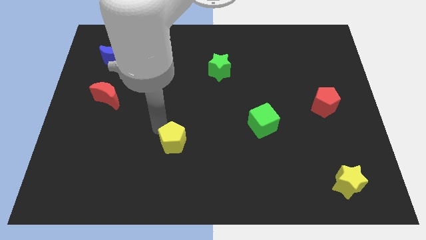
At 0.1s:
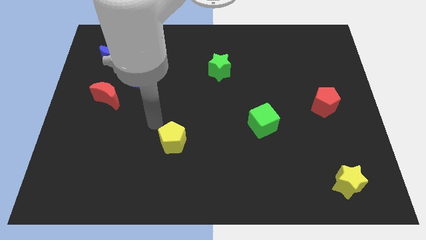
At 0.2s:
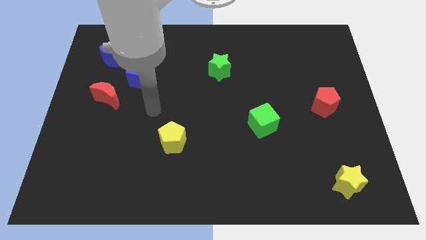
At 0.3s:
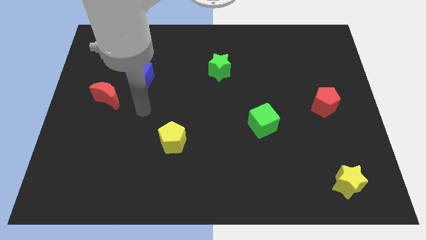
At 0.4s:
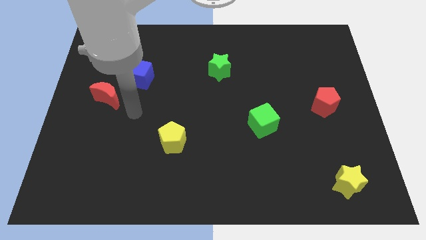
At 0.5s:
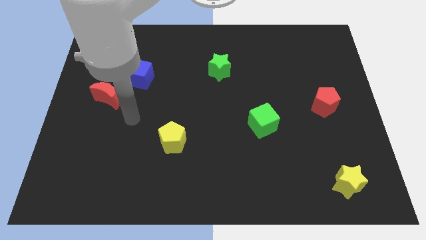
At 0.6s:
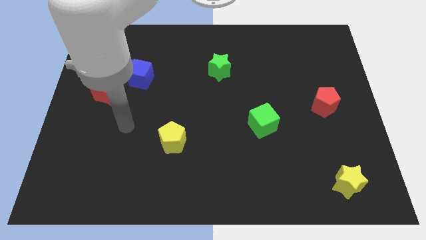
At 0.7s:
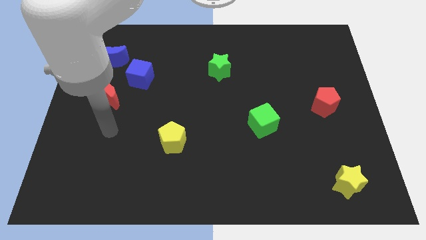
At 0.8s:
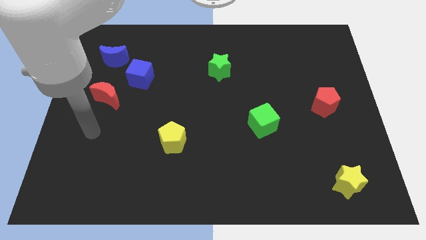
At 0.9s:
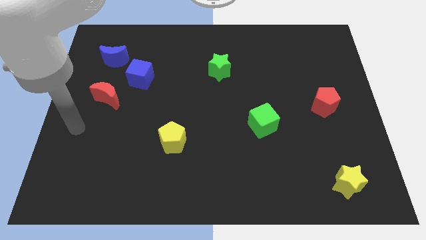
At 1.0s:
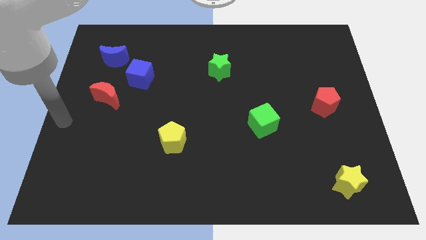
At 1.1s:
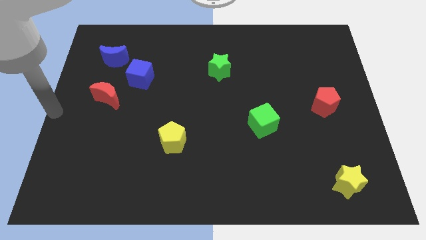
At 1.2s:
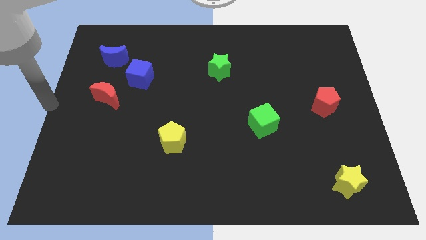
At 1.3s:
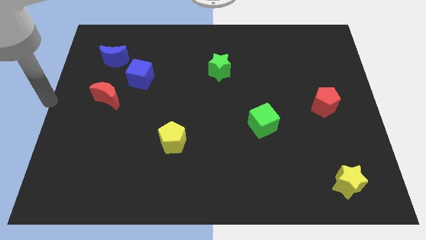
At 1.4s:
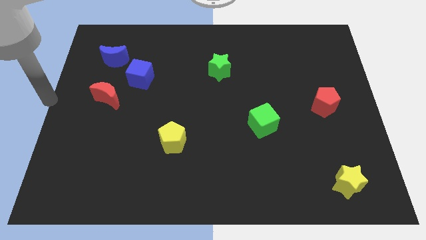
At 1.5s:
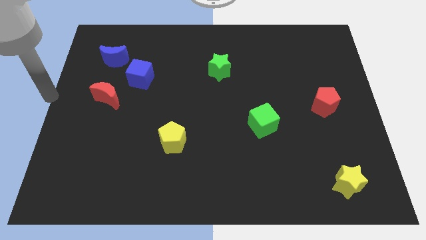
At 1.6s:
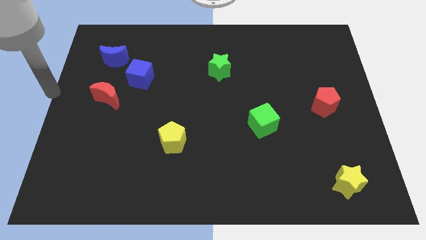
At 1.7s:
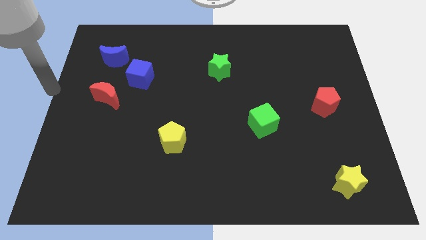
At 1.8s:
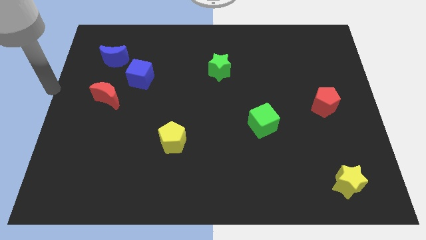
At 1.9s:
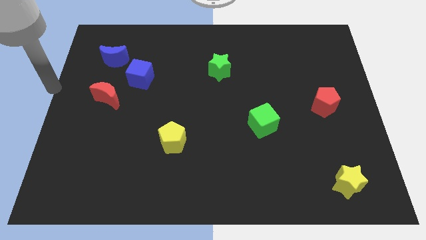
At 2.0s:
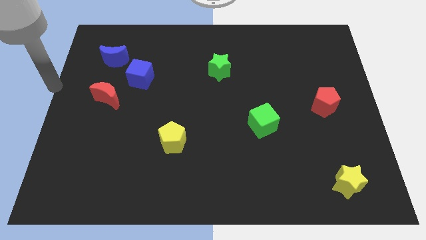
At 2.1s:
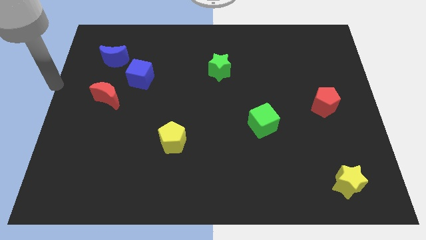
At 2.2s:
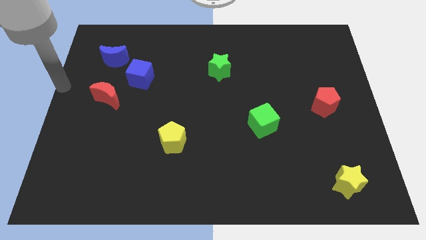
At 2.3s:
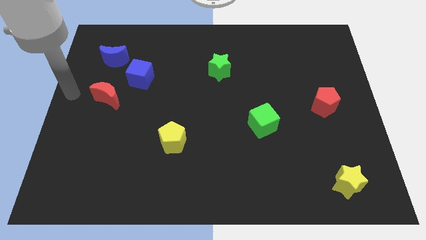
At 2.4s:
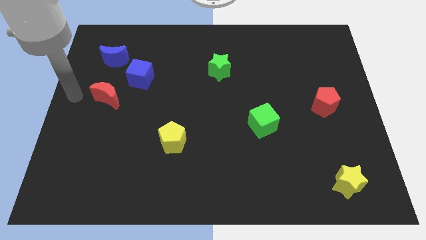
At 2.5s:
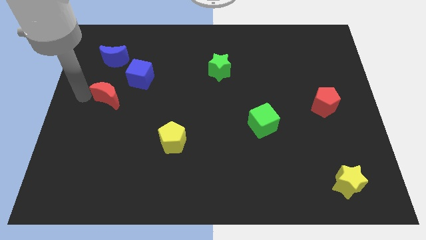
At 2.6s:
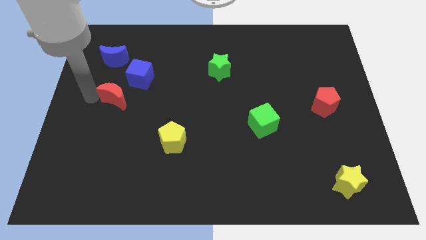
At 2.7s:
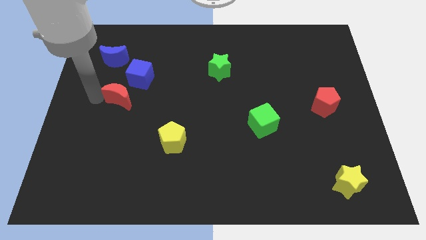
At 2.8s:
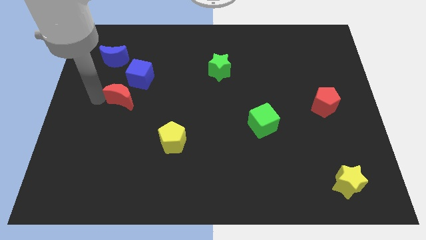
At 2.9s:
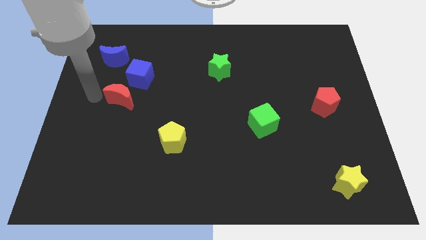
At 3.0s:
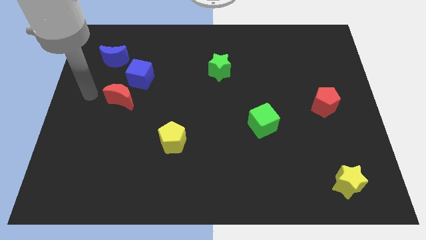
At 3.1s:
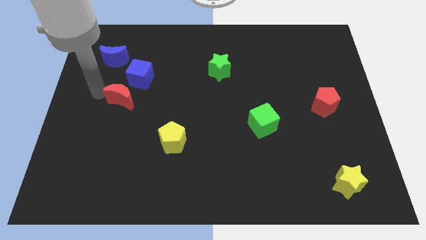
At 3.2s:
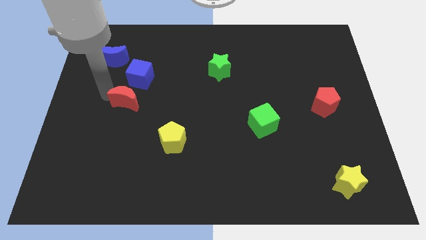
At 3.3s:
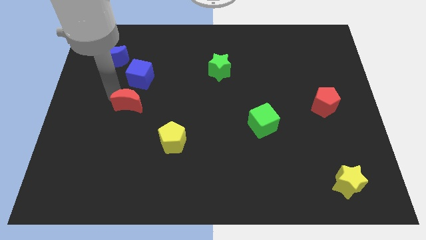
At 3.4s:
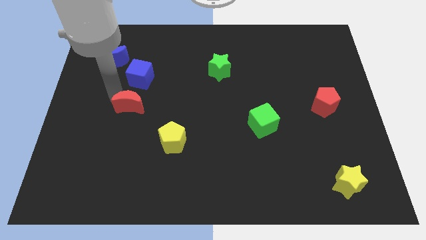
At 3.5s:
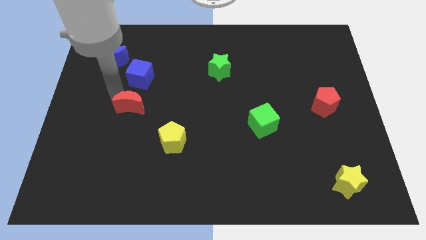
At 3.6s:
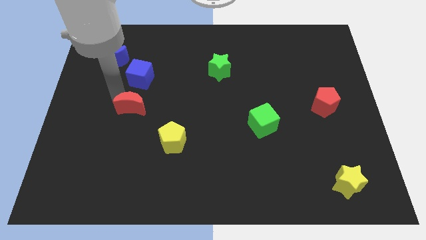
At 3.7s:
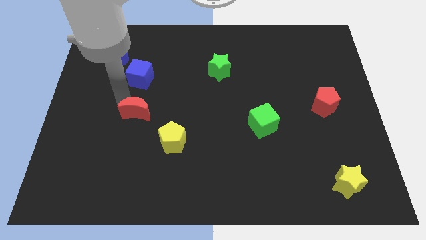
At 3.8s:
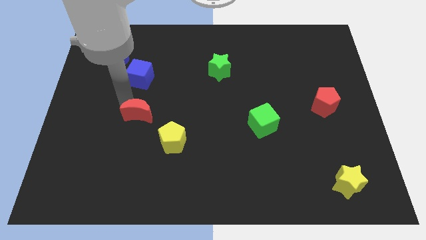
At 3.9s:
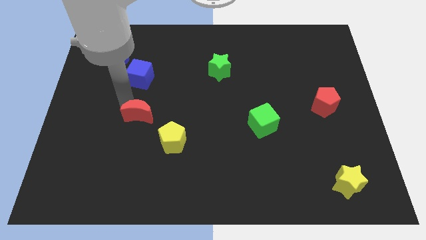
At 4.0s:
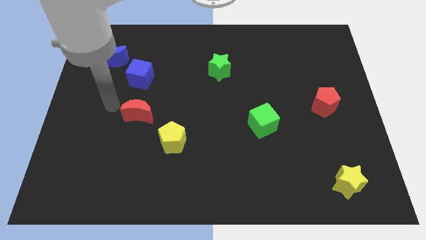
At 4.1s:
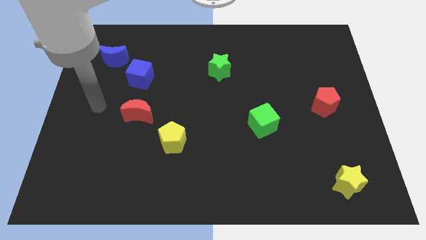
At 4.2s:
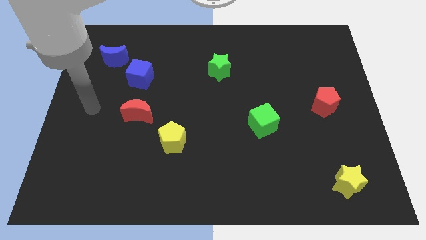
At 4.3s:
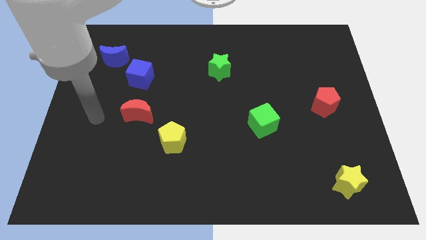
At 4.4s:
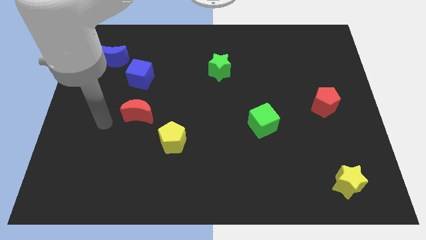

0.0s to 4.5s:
put the red crescent diagonally above the top left side of the yellow pentagon

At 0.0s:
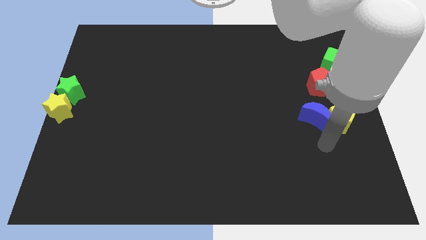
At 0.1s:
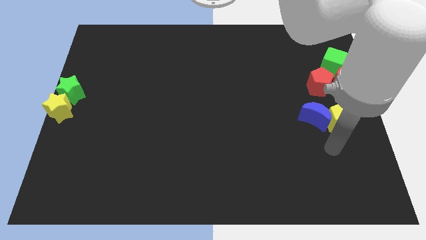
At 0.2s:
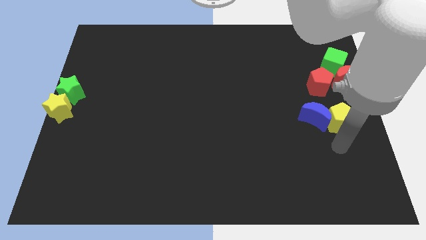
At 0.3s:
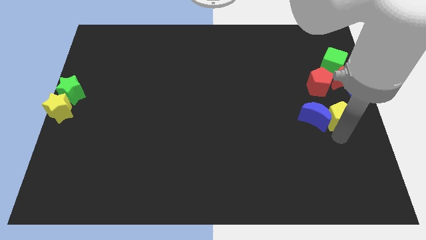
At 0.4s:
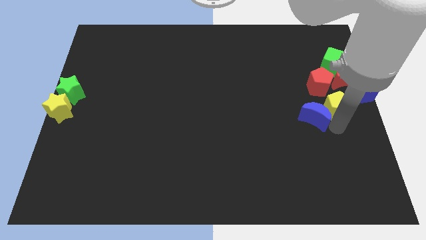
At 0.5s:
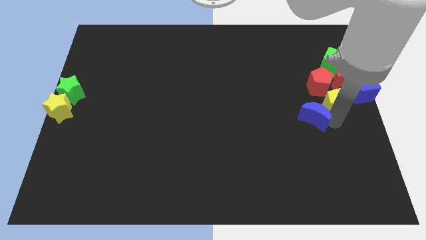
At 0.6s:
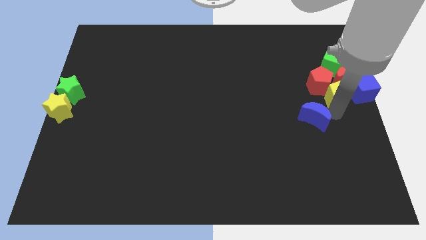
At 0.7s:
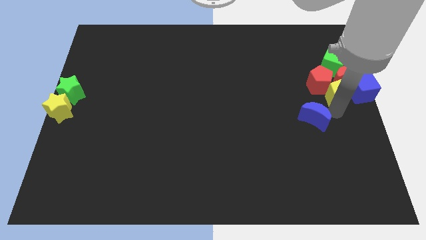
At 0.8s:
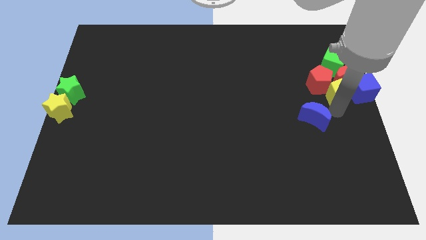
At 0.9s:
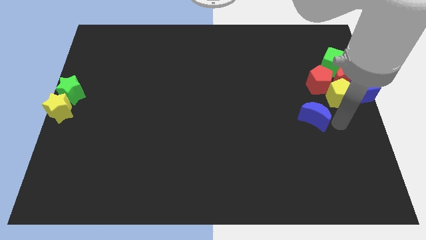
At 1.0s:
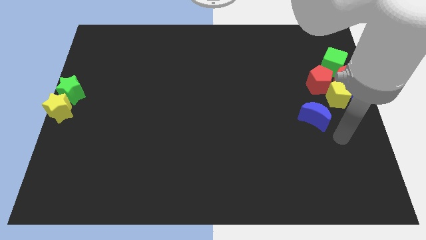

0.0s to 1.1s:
push the yellow star into the group of blocks

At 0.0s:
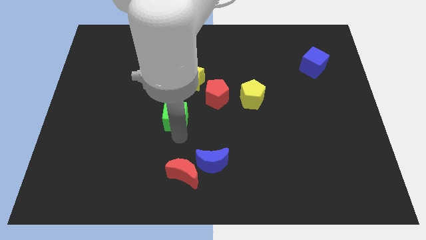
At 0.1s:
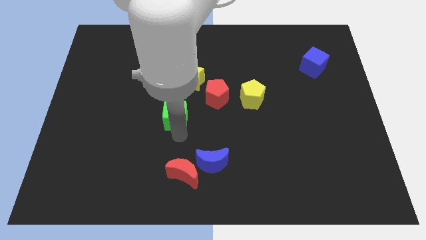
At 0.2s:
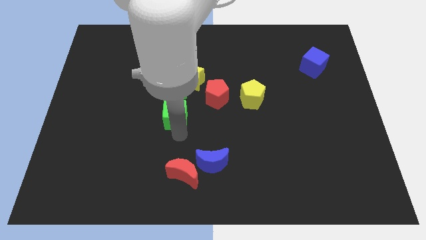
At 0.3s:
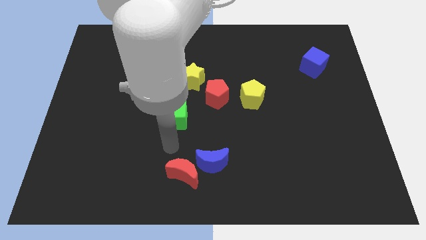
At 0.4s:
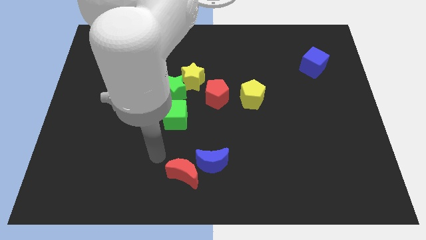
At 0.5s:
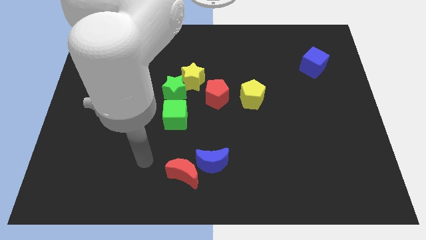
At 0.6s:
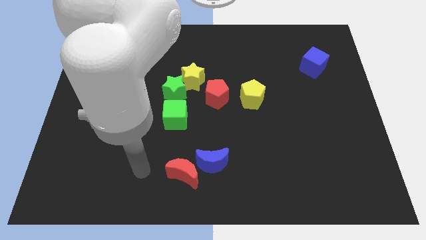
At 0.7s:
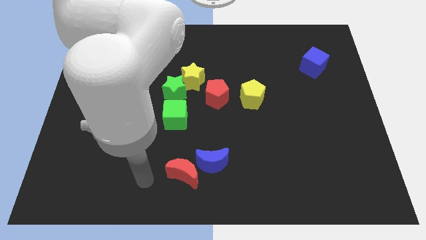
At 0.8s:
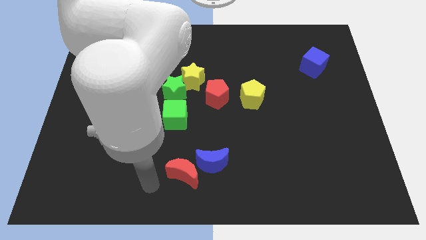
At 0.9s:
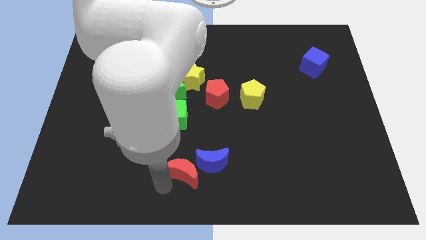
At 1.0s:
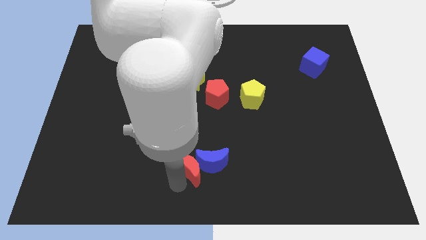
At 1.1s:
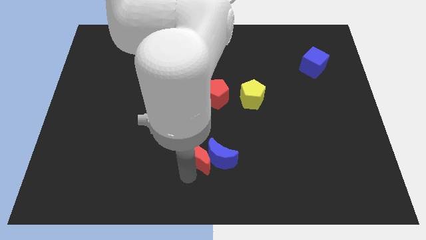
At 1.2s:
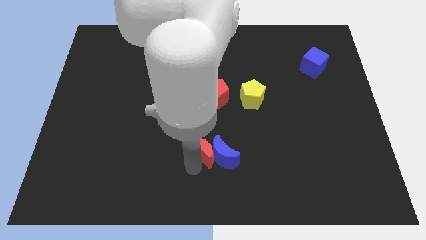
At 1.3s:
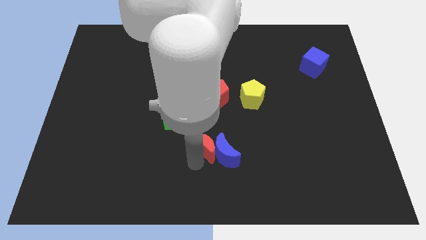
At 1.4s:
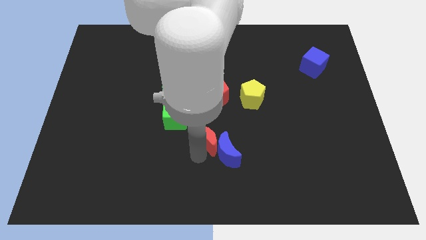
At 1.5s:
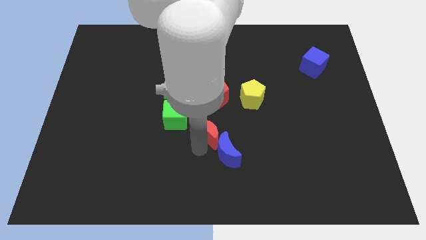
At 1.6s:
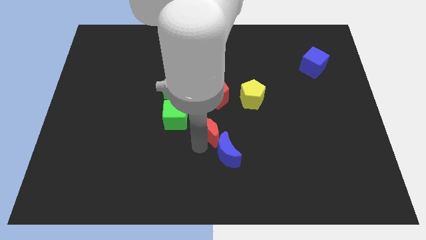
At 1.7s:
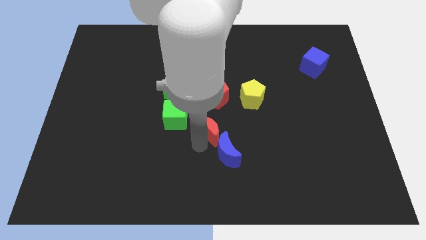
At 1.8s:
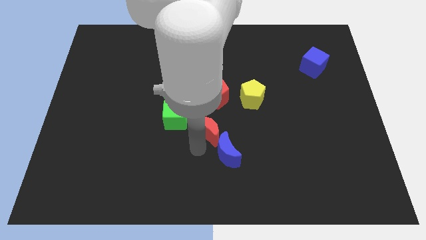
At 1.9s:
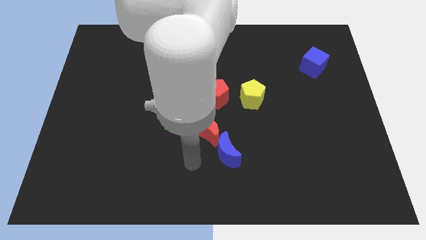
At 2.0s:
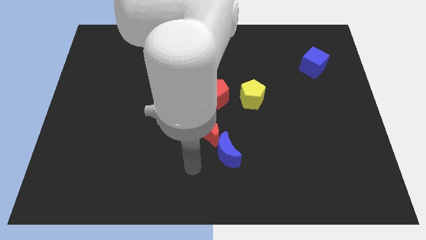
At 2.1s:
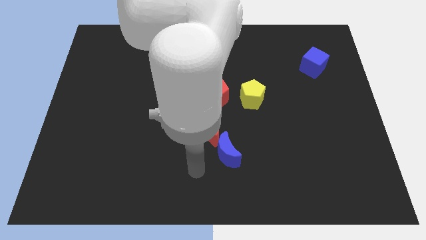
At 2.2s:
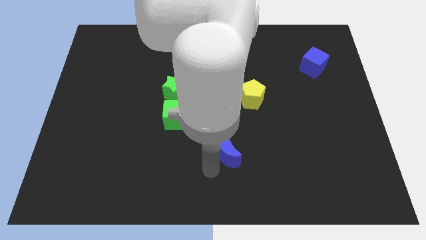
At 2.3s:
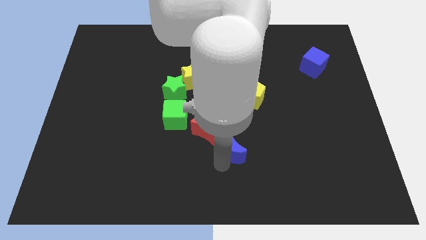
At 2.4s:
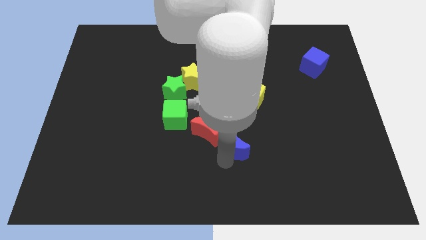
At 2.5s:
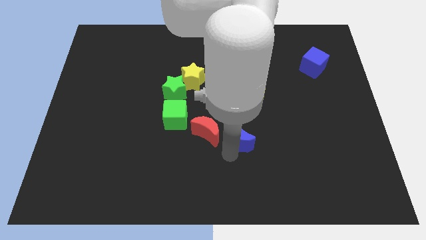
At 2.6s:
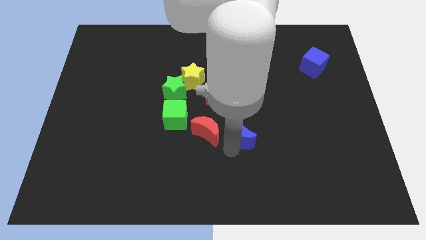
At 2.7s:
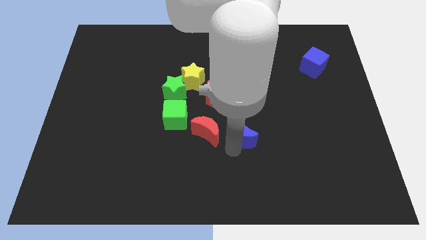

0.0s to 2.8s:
push the red moon into the blue moon

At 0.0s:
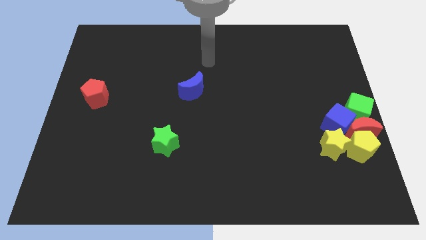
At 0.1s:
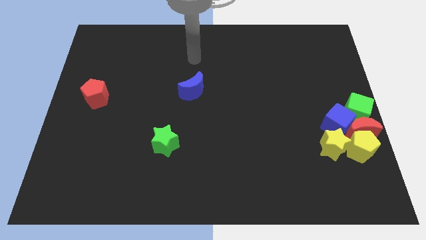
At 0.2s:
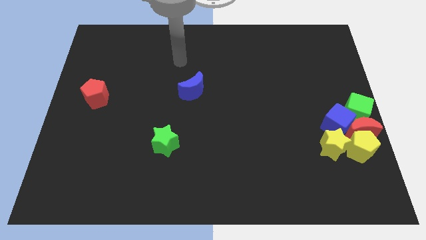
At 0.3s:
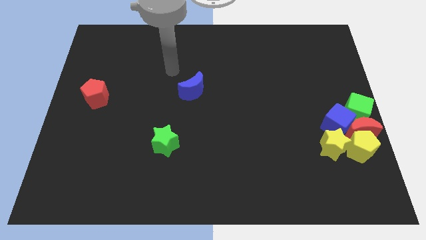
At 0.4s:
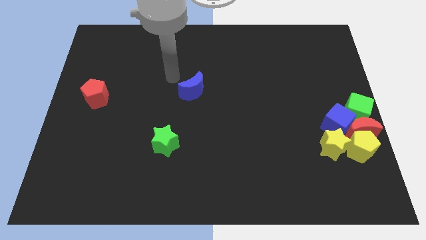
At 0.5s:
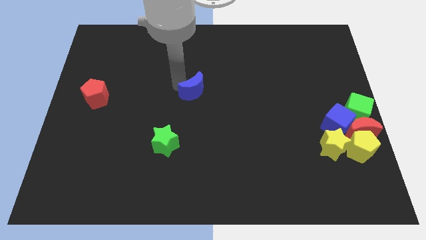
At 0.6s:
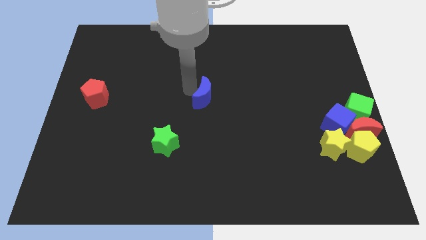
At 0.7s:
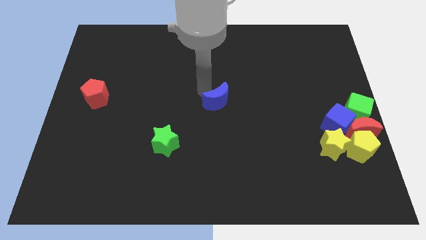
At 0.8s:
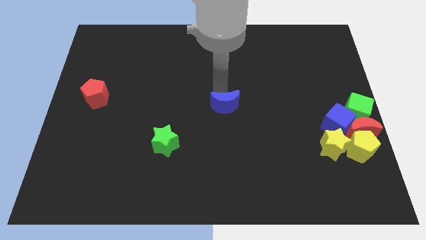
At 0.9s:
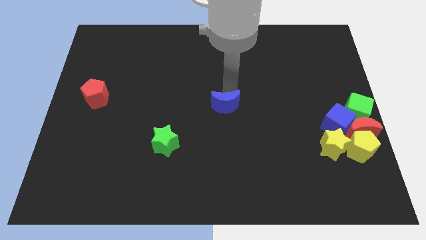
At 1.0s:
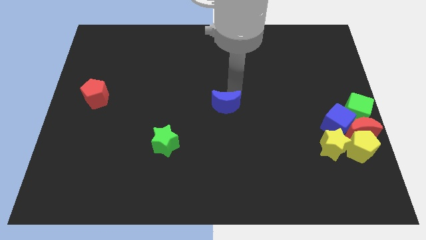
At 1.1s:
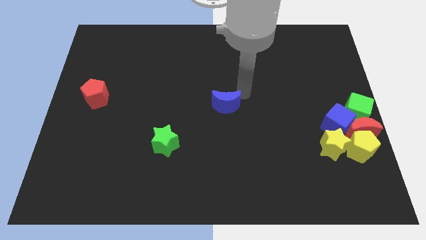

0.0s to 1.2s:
slide the blue moon into the center
